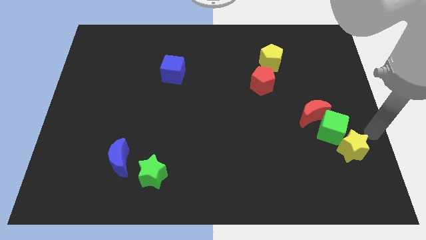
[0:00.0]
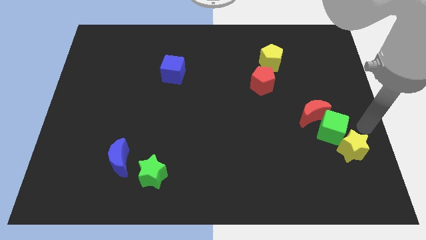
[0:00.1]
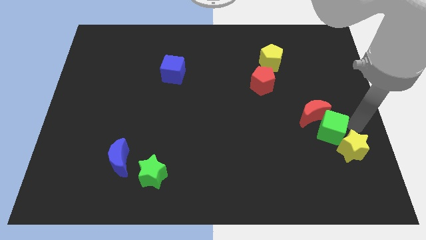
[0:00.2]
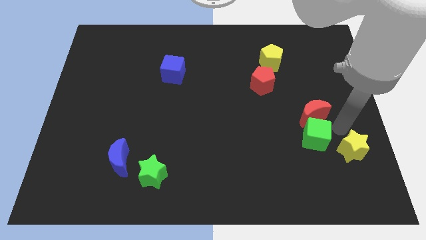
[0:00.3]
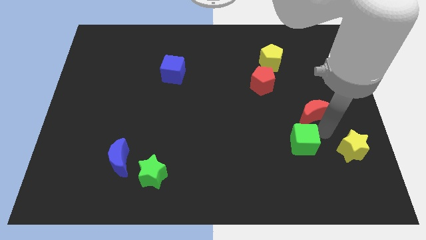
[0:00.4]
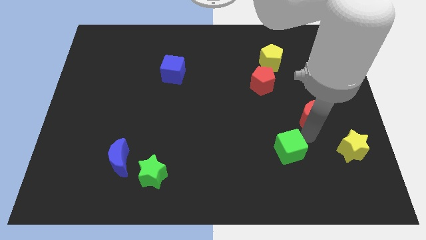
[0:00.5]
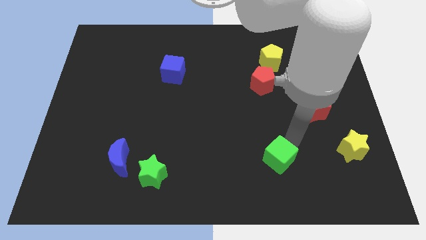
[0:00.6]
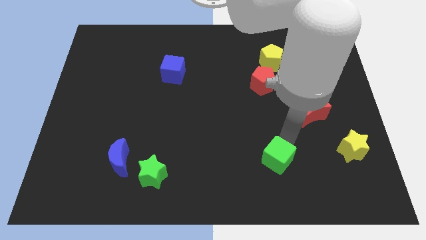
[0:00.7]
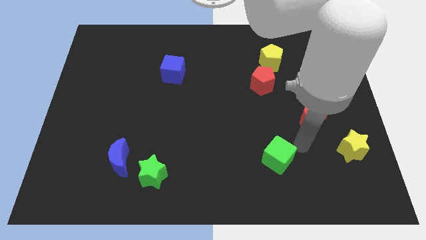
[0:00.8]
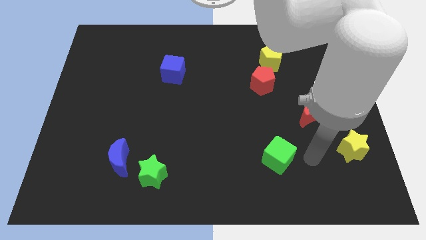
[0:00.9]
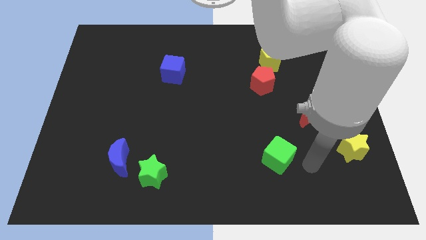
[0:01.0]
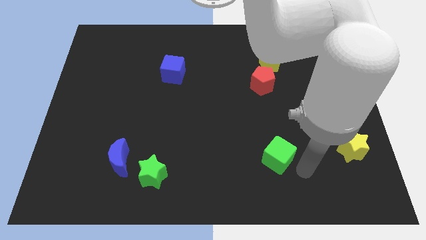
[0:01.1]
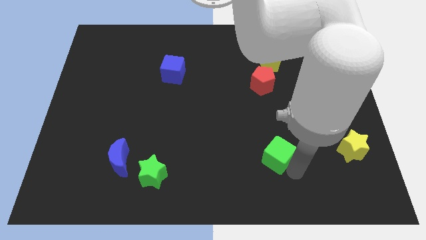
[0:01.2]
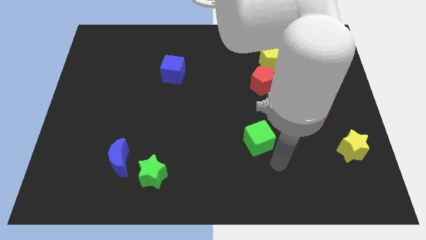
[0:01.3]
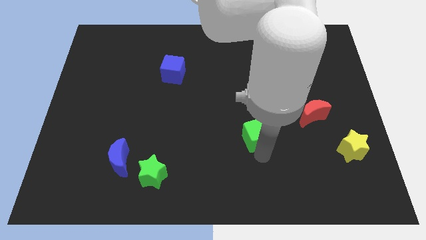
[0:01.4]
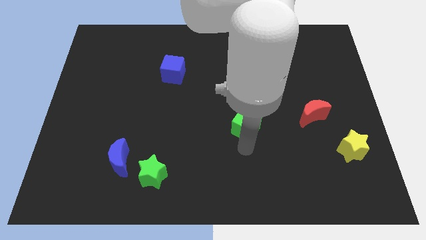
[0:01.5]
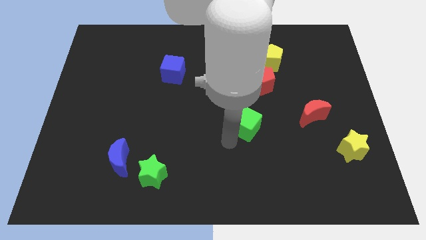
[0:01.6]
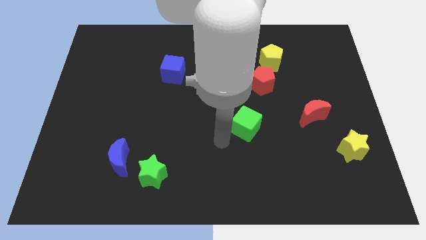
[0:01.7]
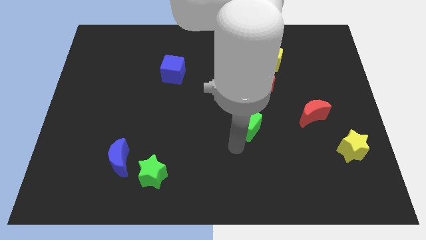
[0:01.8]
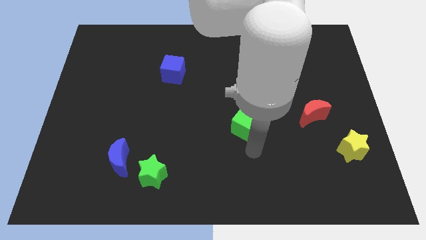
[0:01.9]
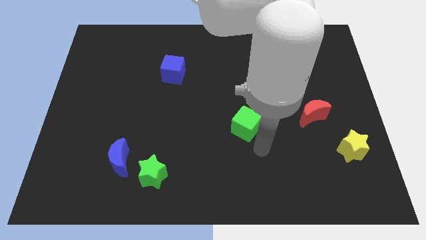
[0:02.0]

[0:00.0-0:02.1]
move the green cube left to the red moon

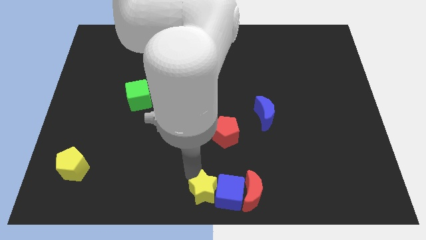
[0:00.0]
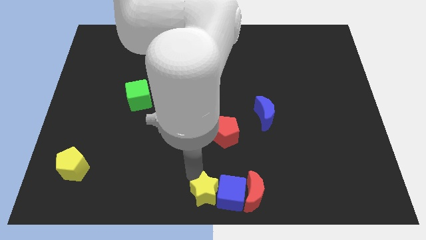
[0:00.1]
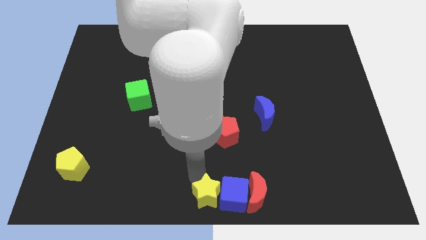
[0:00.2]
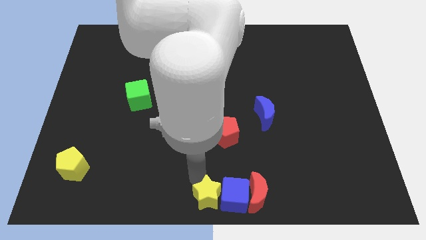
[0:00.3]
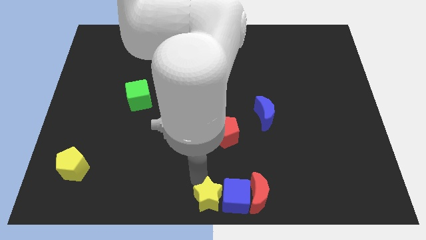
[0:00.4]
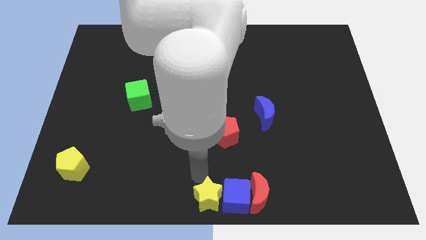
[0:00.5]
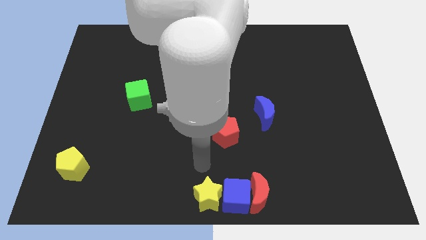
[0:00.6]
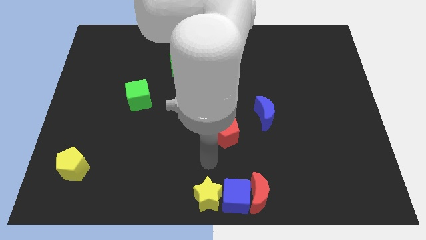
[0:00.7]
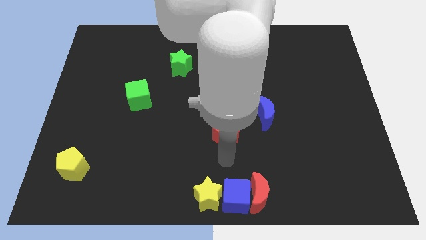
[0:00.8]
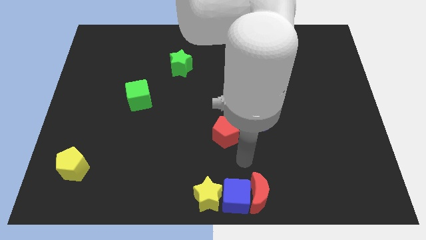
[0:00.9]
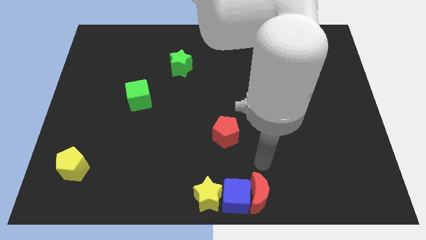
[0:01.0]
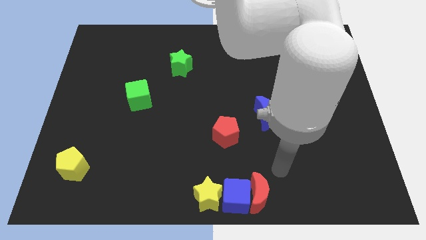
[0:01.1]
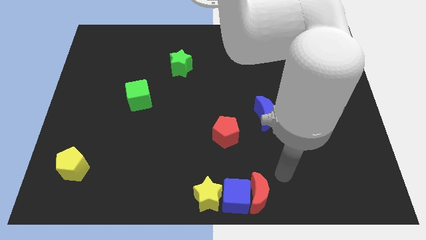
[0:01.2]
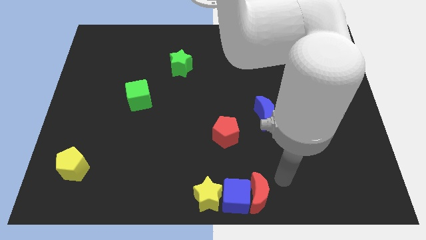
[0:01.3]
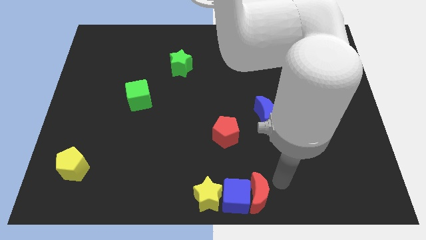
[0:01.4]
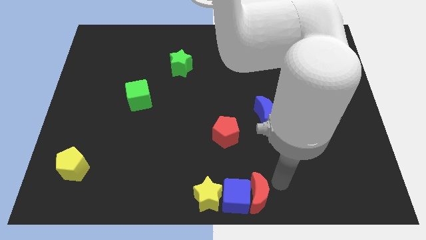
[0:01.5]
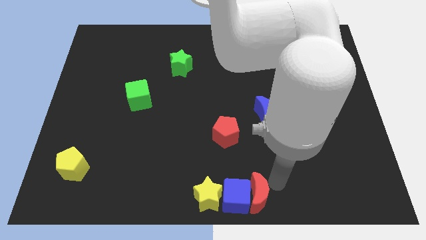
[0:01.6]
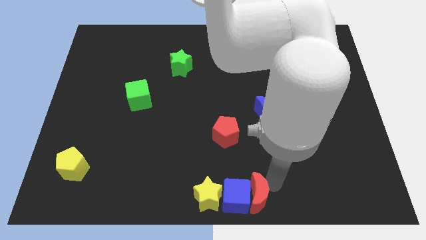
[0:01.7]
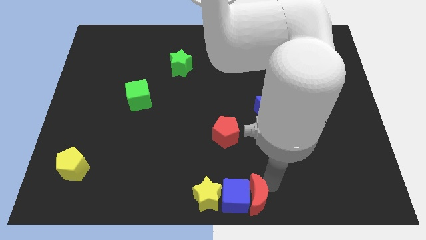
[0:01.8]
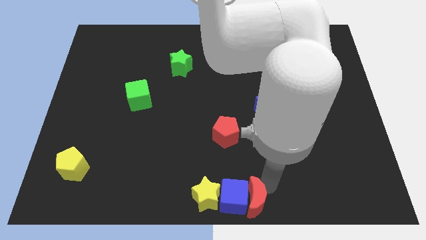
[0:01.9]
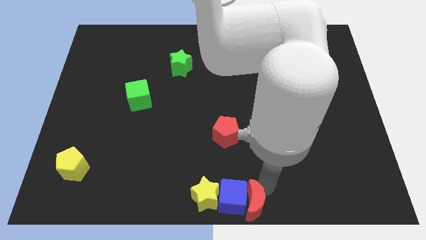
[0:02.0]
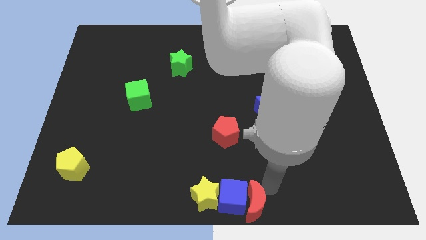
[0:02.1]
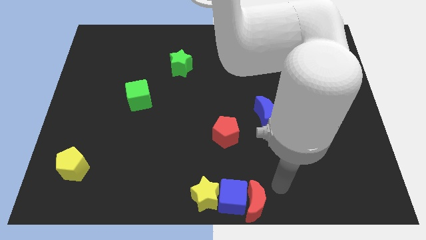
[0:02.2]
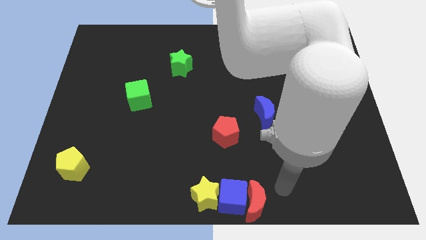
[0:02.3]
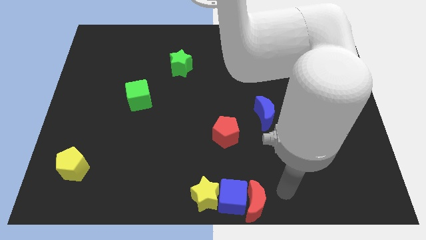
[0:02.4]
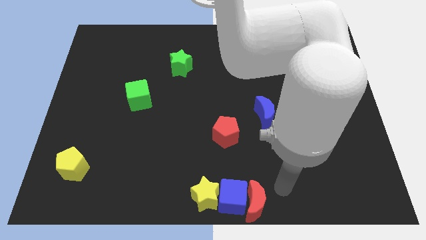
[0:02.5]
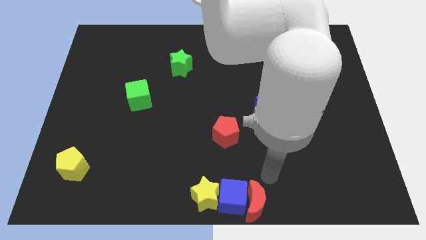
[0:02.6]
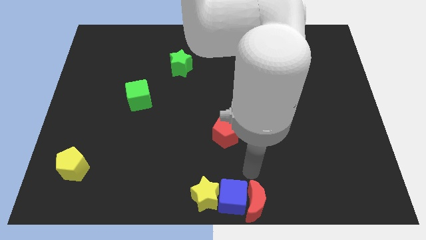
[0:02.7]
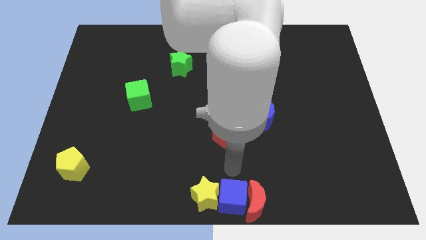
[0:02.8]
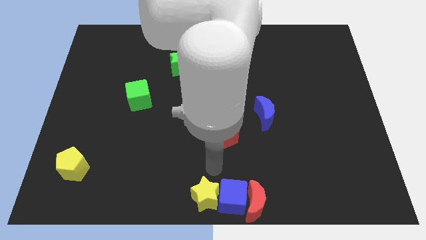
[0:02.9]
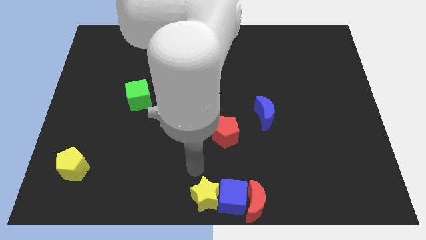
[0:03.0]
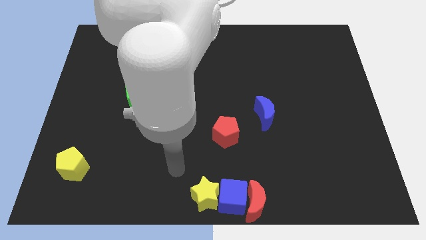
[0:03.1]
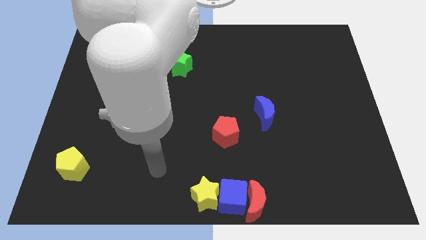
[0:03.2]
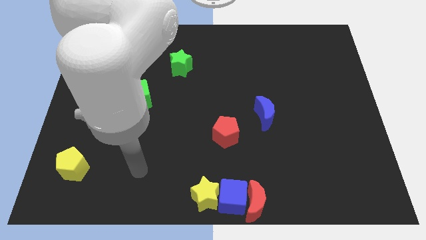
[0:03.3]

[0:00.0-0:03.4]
point your arm to the right side of the yellow pentagon

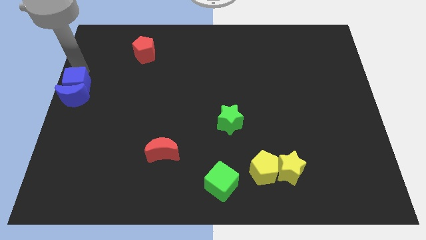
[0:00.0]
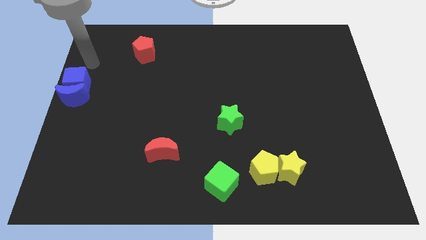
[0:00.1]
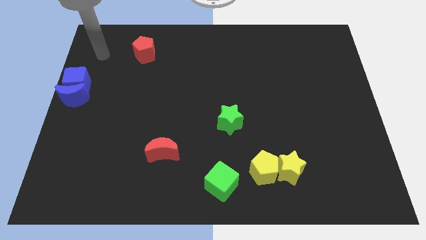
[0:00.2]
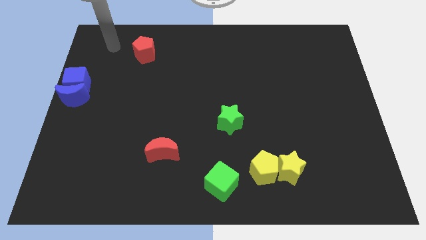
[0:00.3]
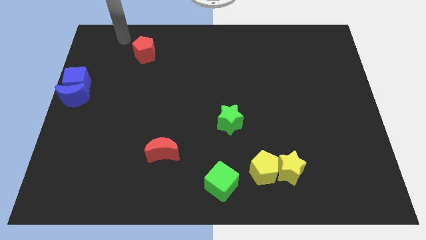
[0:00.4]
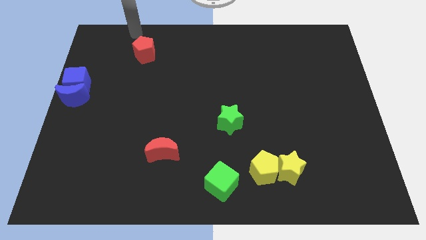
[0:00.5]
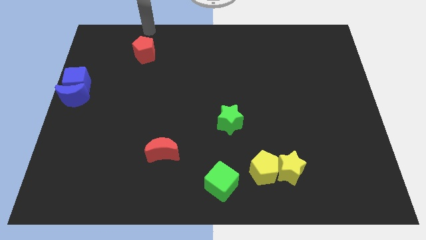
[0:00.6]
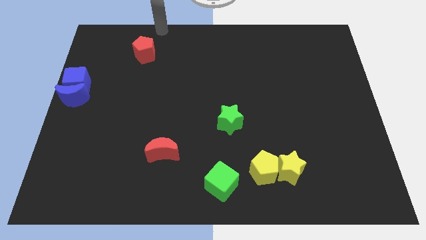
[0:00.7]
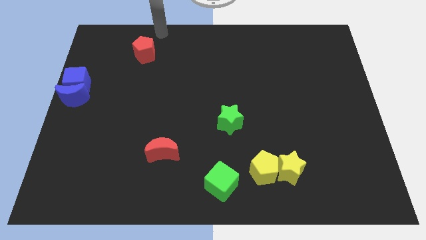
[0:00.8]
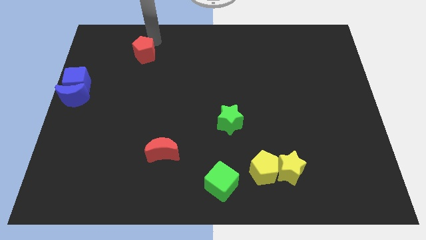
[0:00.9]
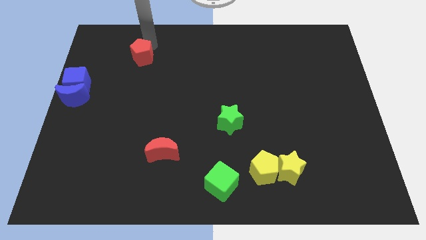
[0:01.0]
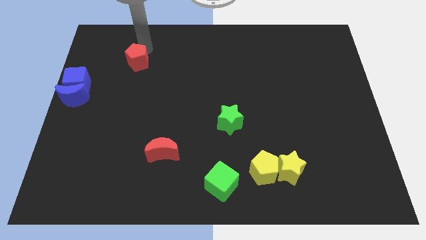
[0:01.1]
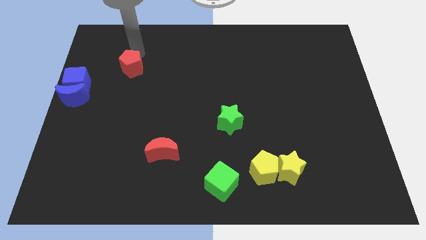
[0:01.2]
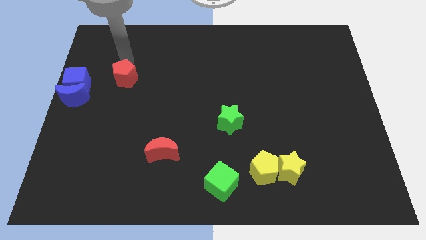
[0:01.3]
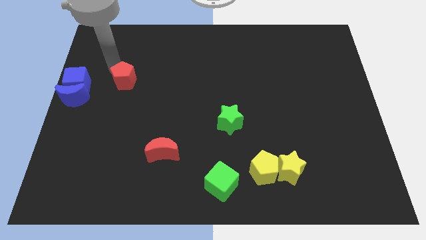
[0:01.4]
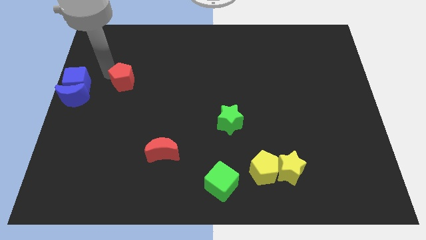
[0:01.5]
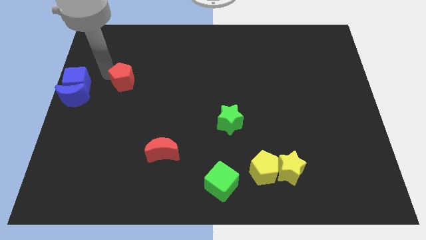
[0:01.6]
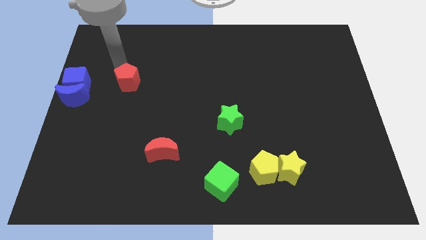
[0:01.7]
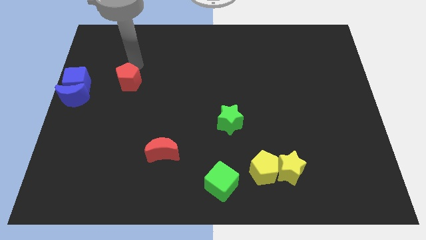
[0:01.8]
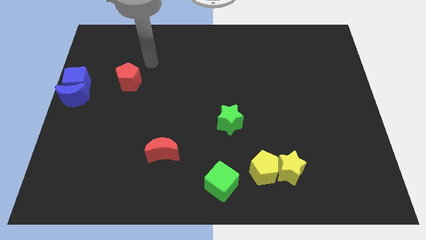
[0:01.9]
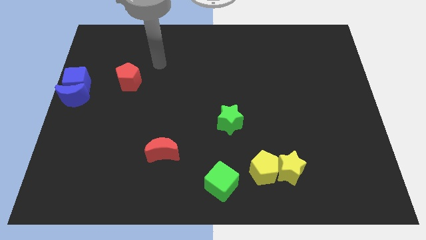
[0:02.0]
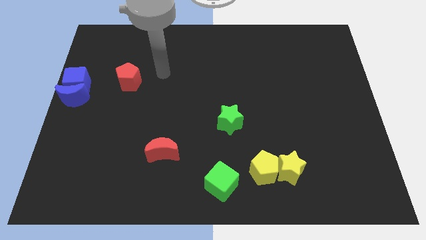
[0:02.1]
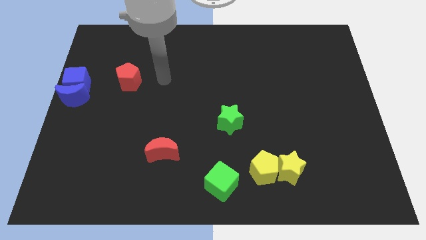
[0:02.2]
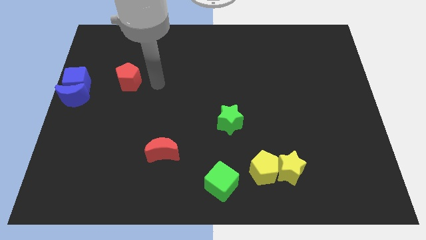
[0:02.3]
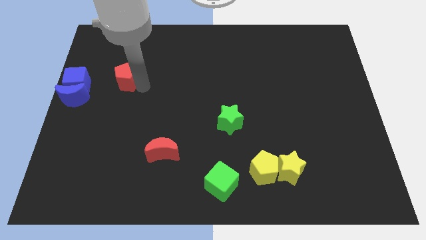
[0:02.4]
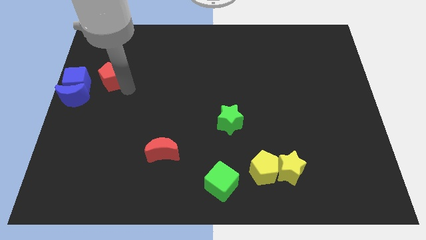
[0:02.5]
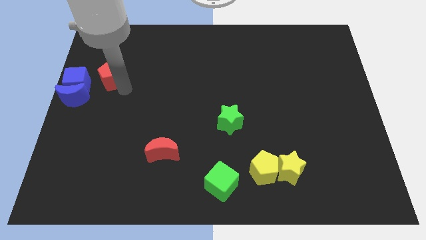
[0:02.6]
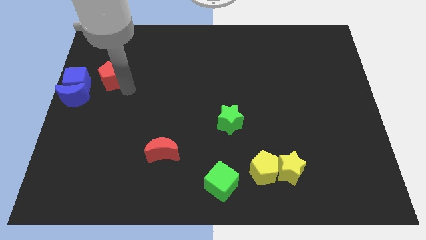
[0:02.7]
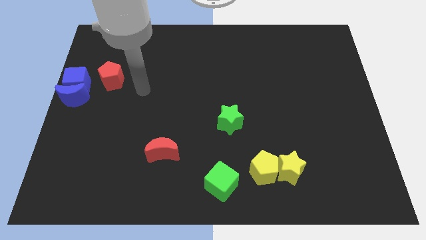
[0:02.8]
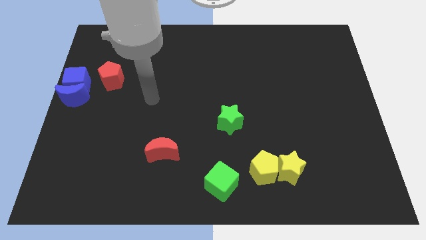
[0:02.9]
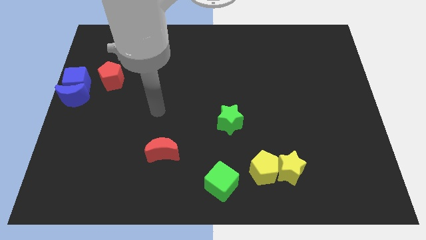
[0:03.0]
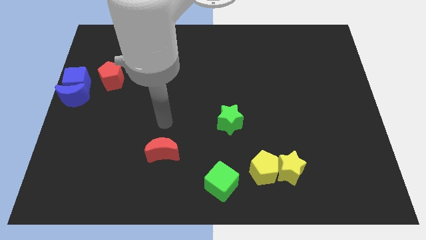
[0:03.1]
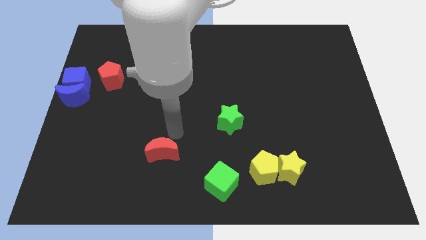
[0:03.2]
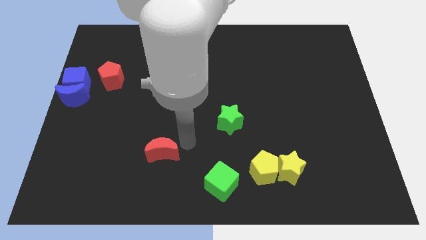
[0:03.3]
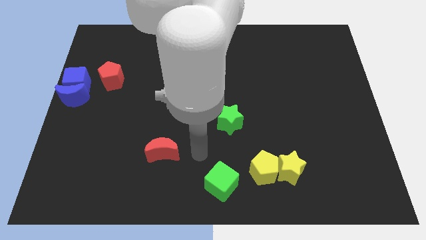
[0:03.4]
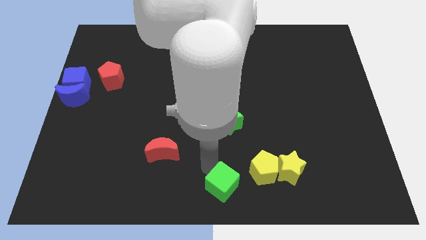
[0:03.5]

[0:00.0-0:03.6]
push the red pentagon right to the blue cube
